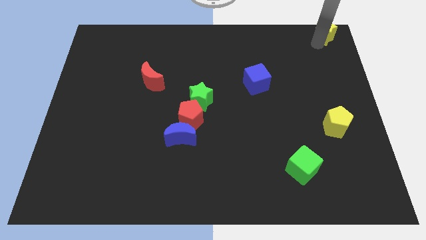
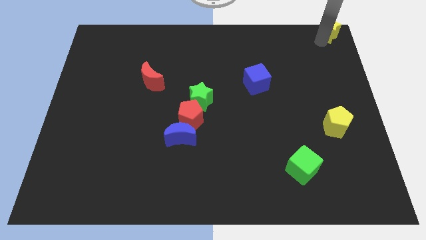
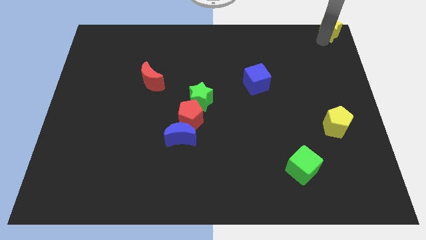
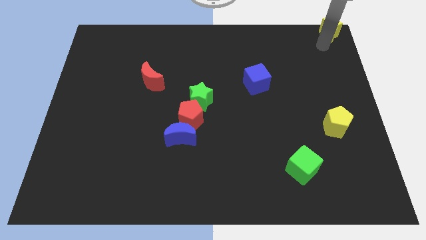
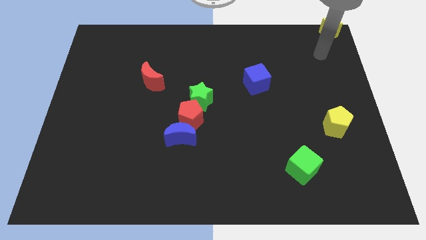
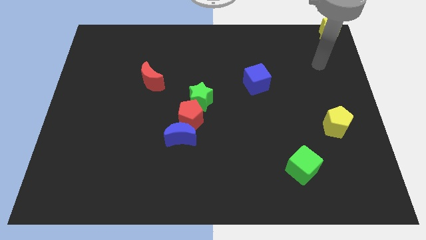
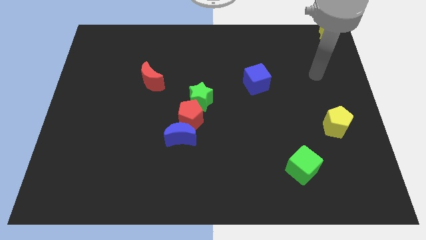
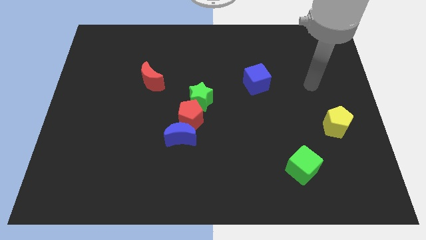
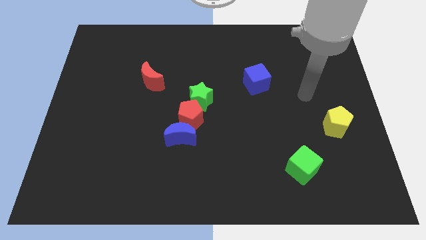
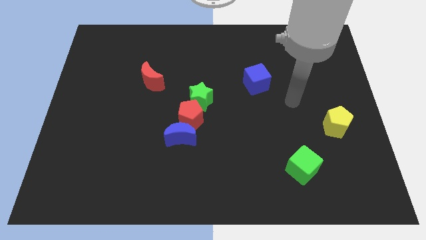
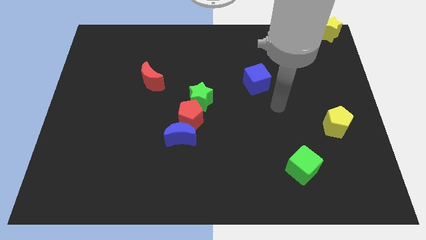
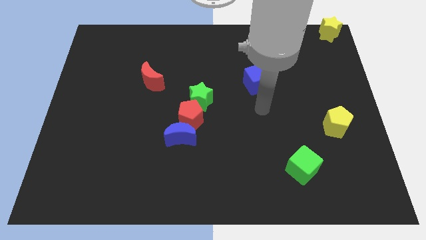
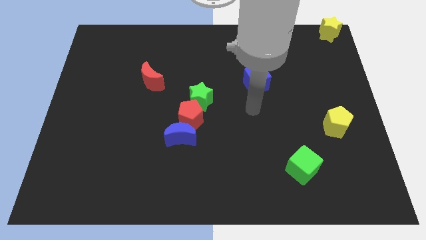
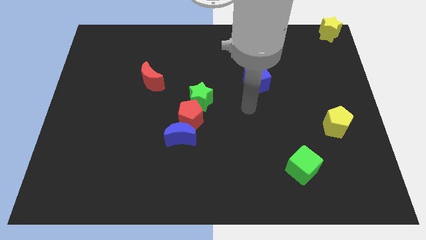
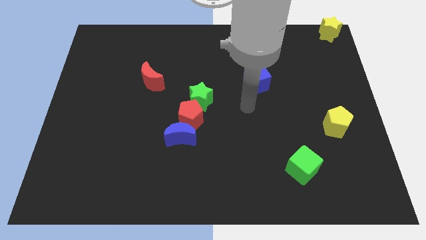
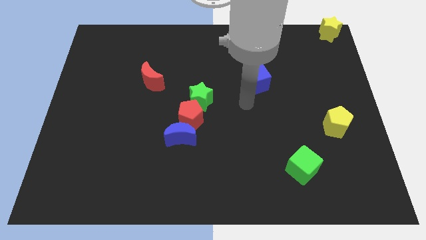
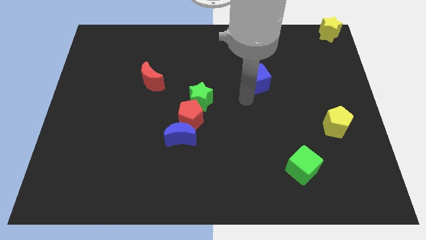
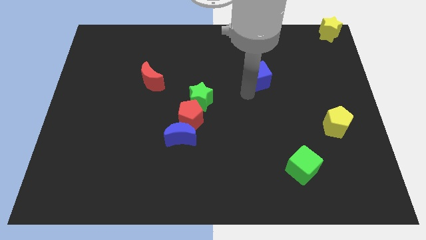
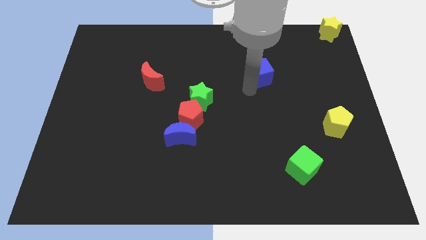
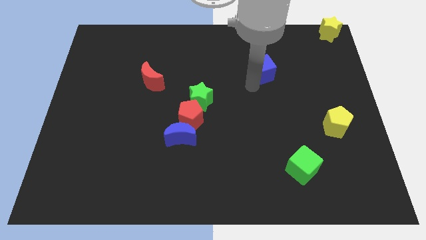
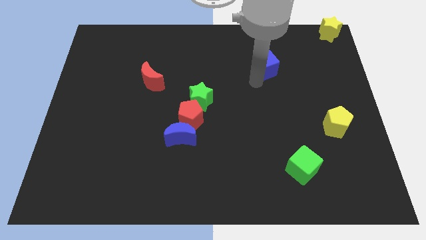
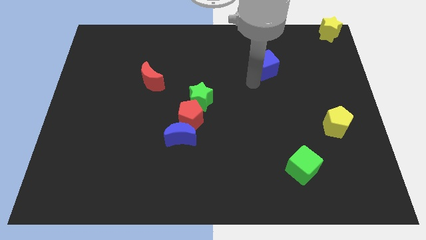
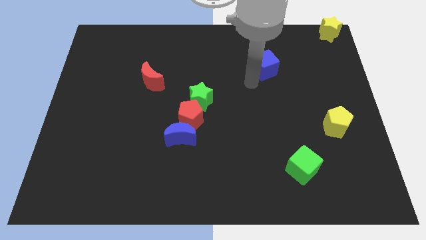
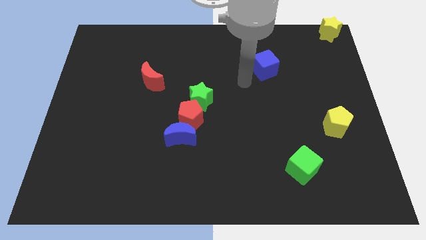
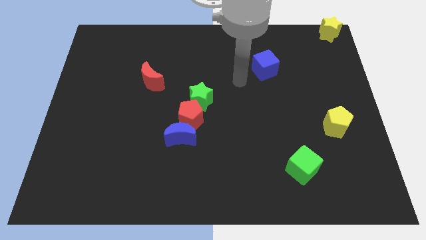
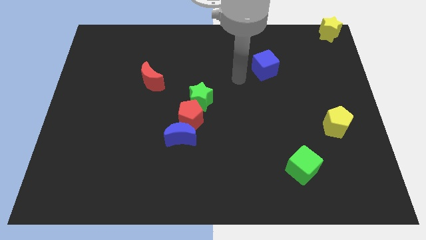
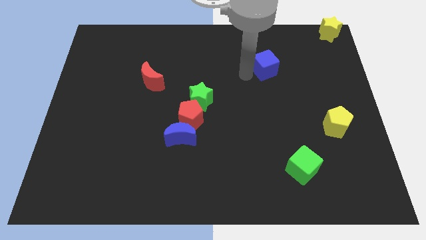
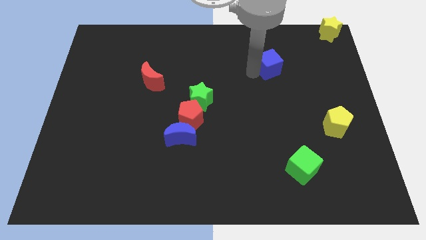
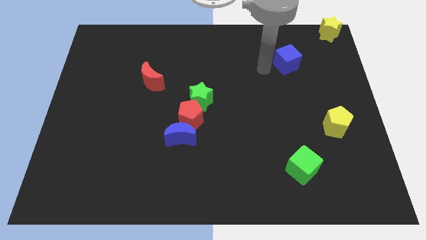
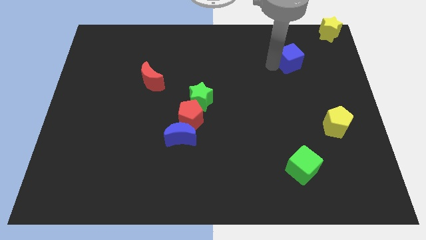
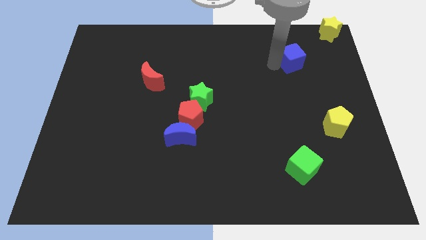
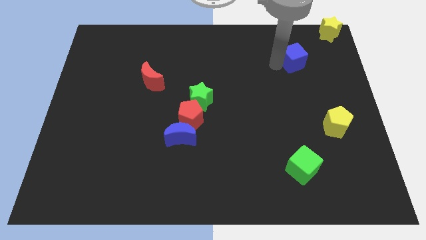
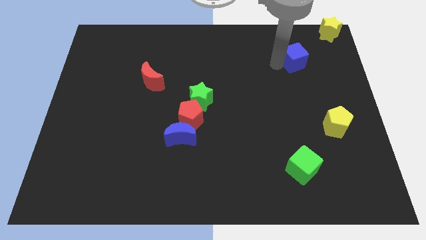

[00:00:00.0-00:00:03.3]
push blue cube above green cube

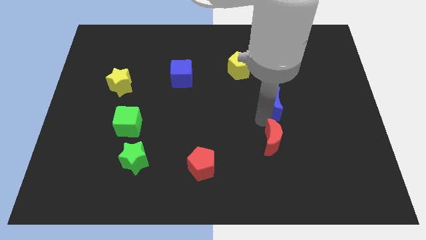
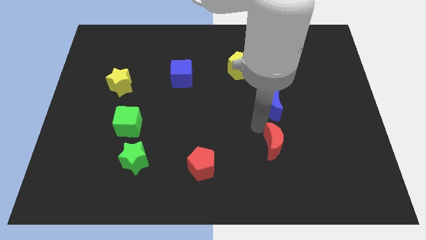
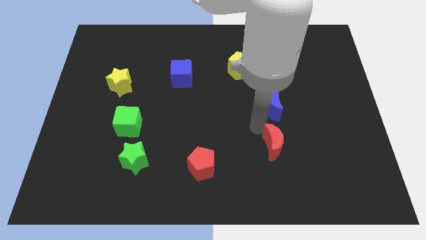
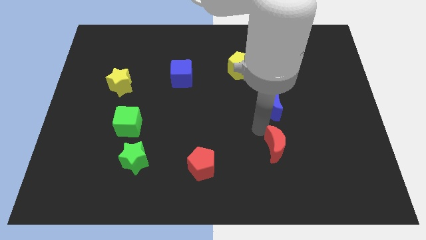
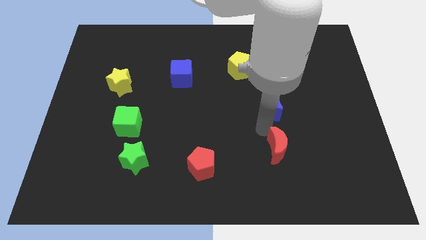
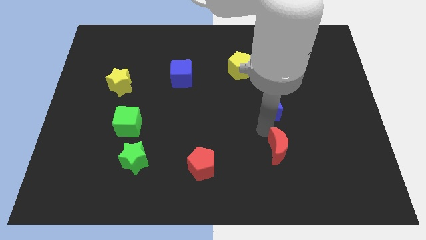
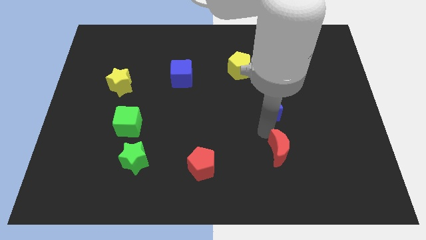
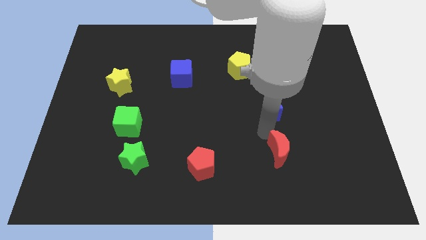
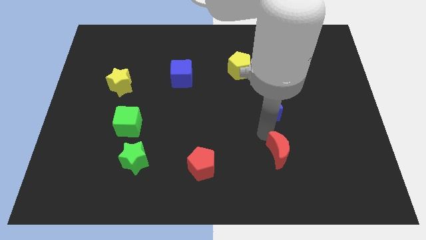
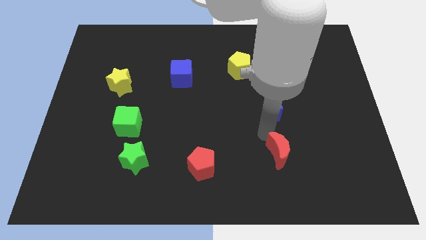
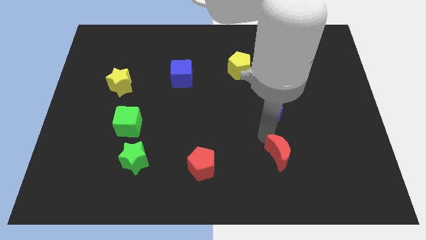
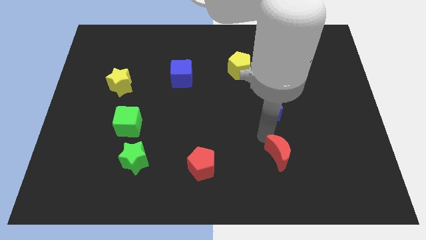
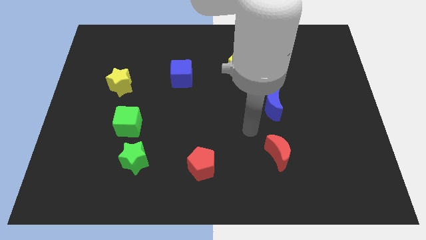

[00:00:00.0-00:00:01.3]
move the red moon down towards the down of blue moon

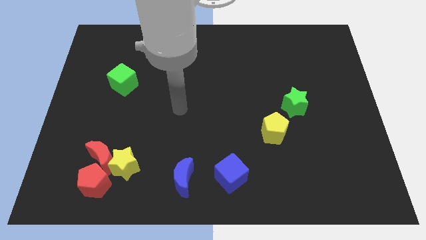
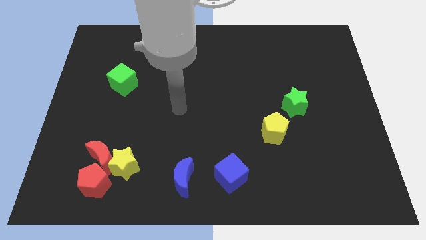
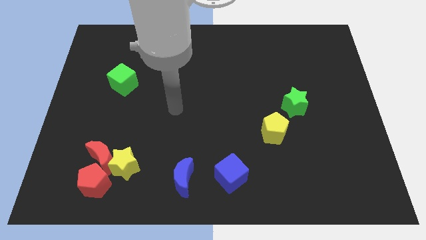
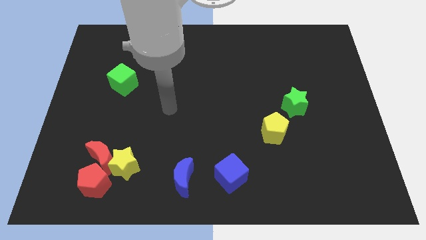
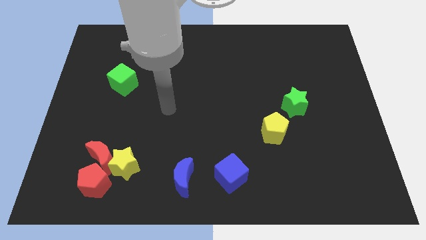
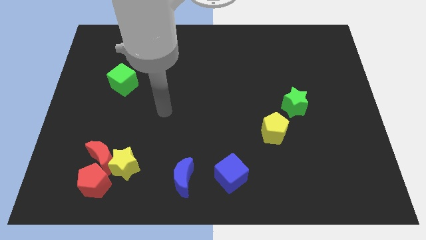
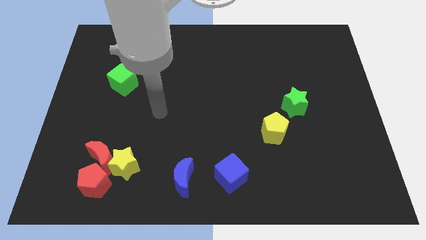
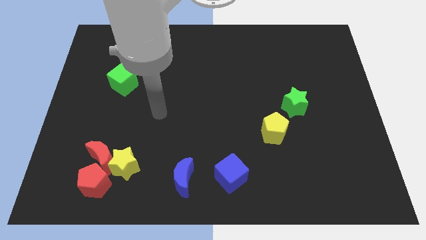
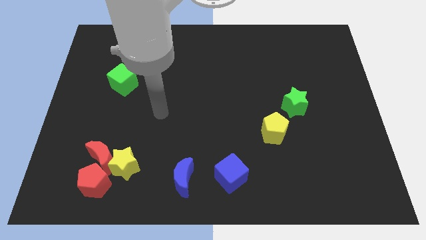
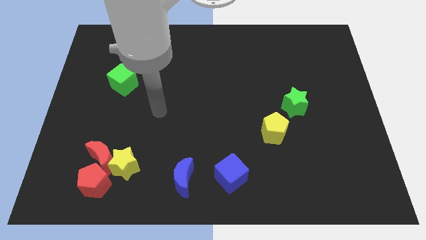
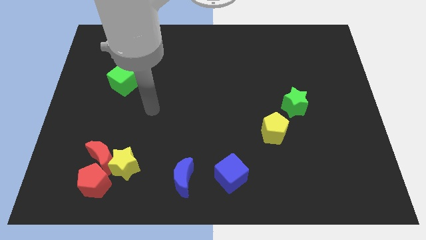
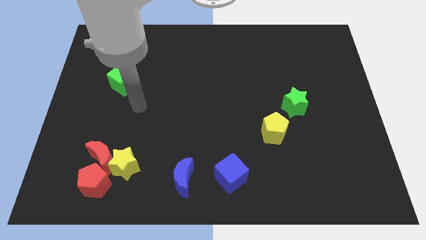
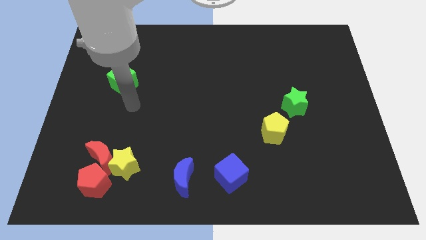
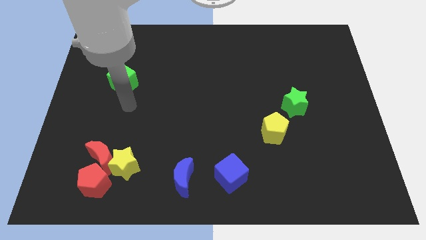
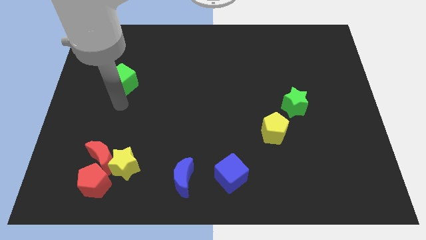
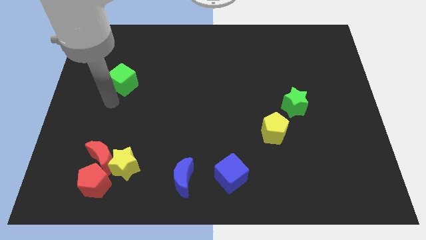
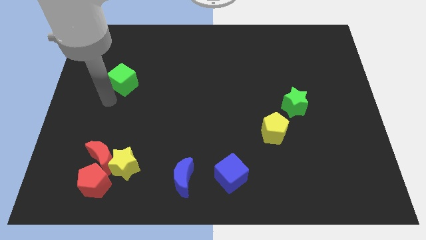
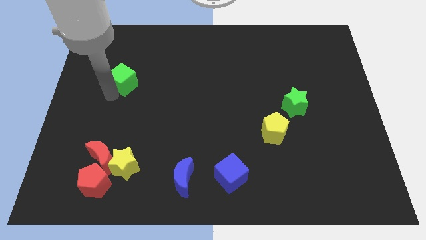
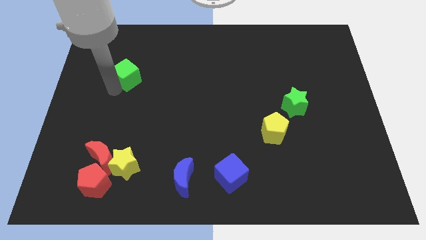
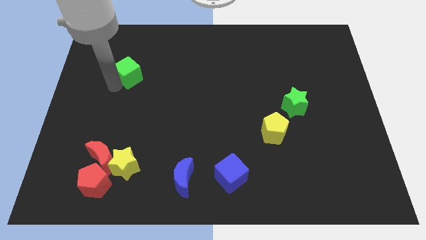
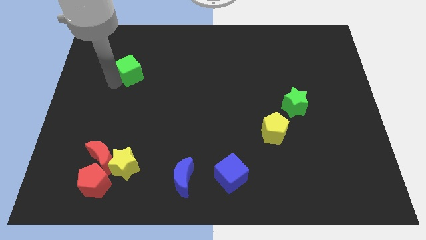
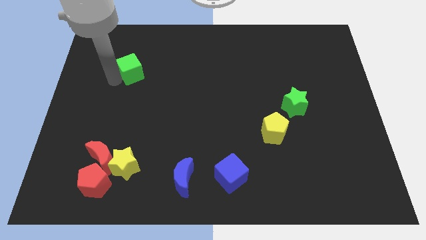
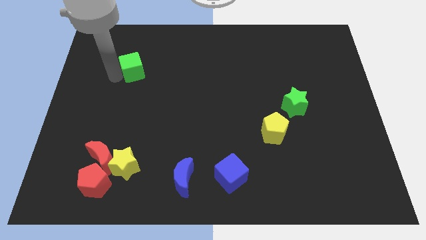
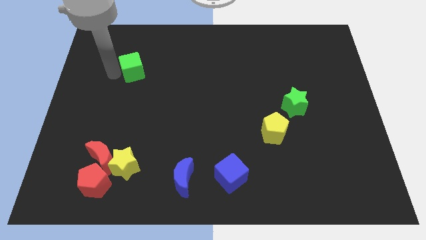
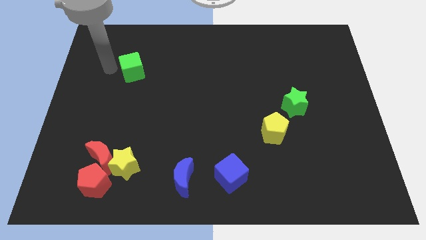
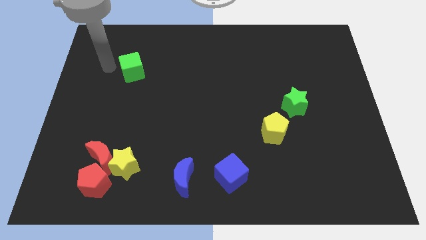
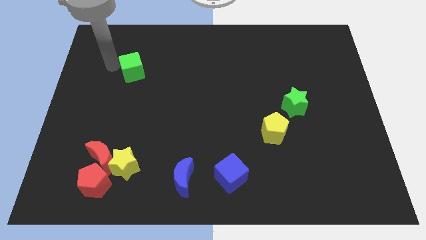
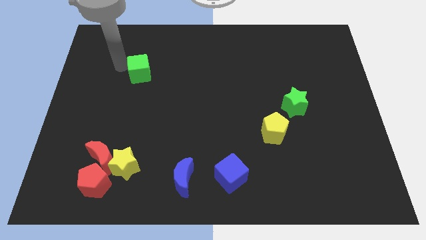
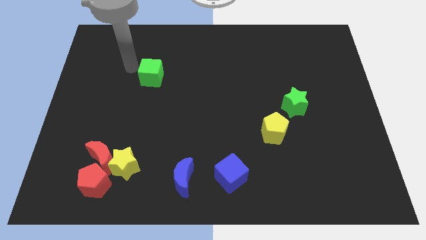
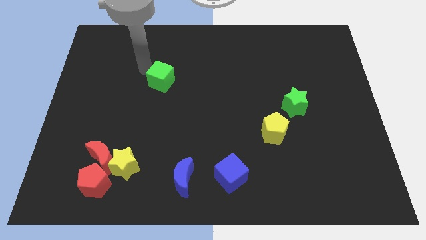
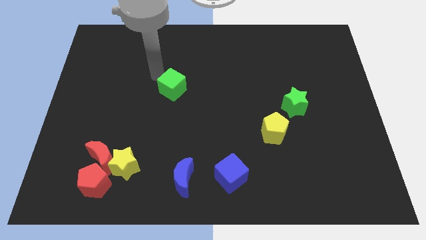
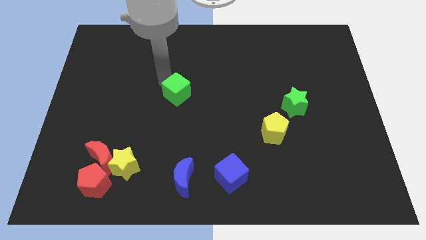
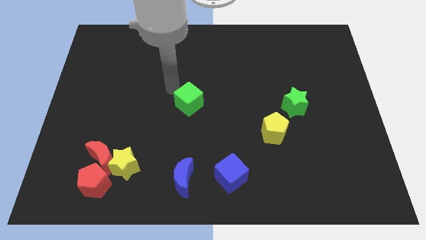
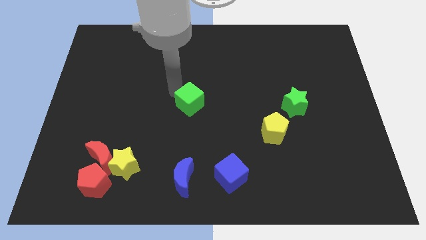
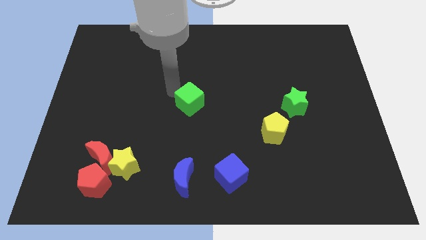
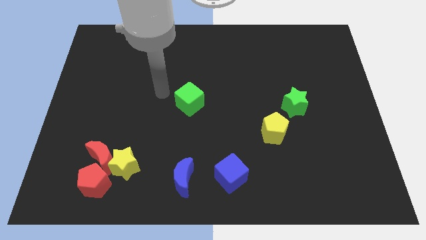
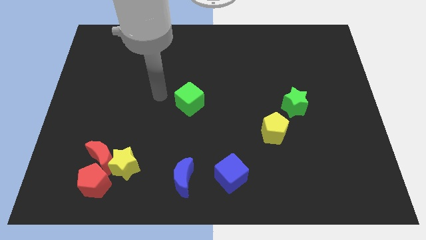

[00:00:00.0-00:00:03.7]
push the green cube towards the center of the board

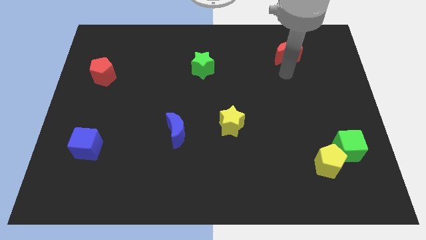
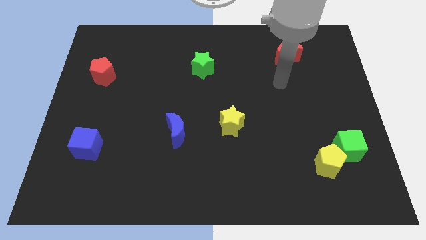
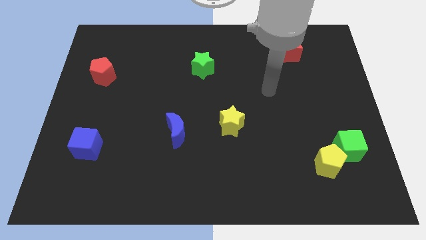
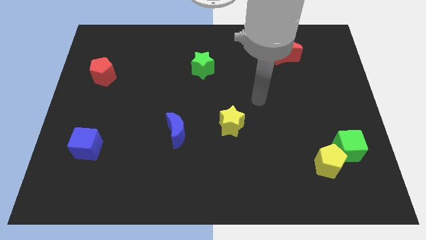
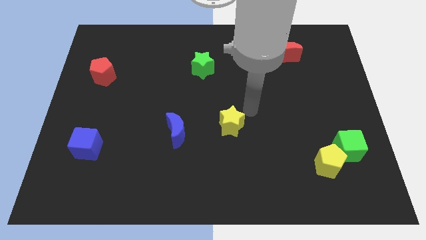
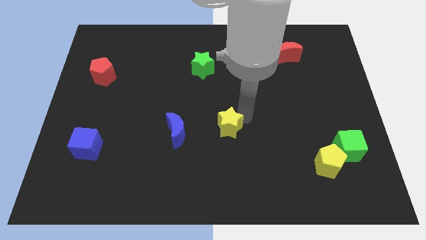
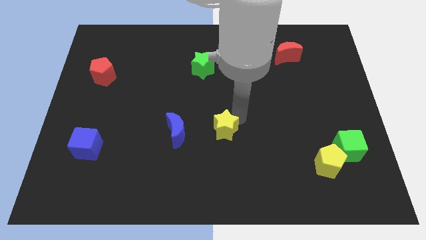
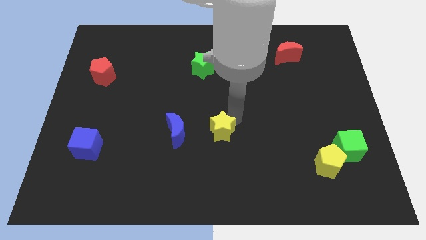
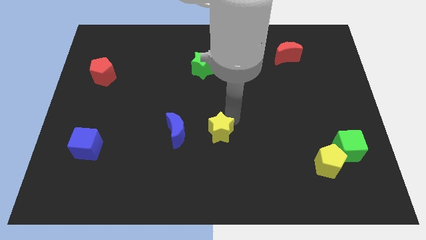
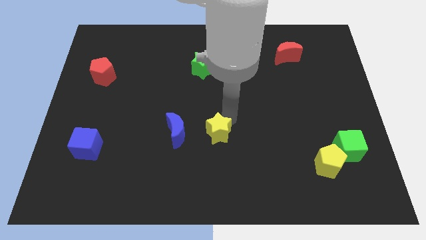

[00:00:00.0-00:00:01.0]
push the yellow star to the right of the blue crescent
